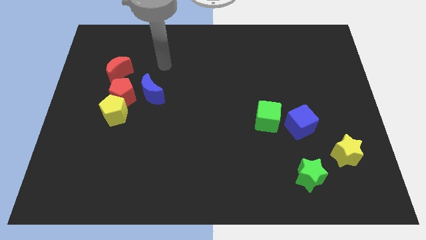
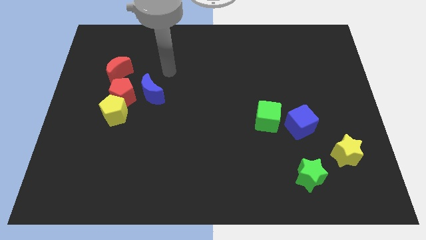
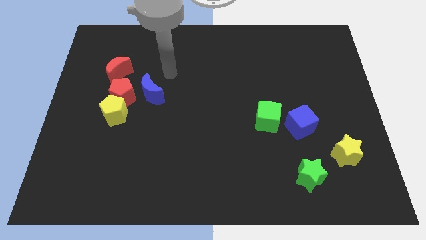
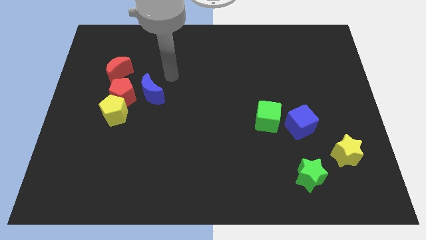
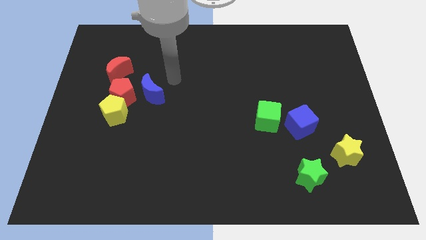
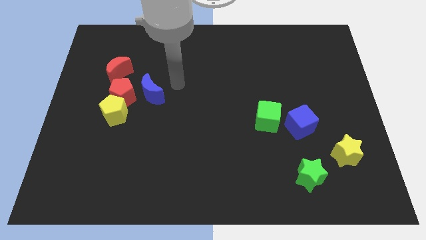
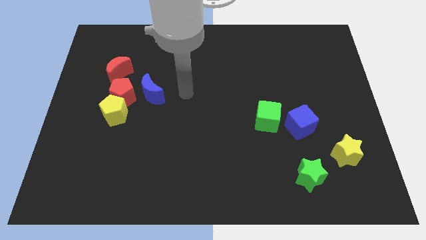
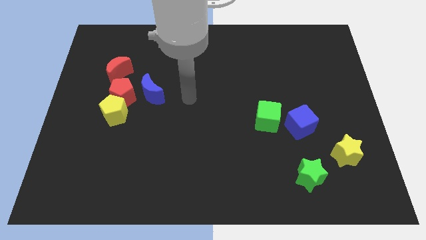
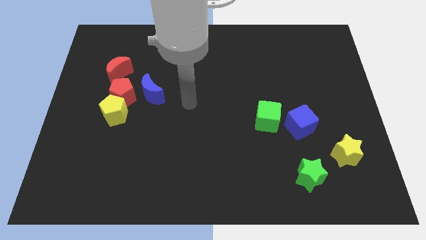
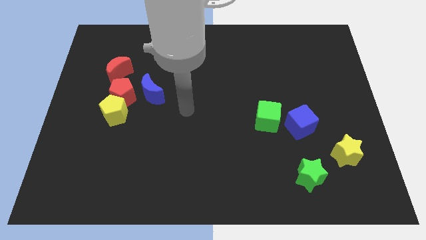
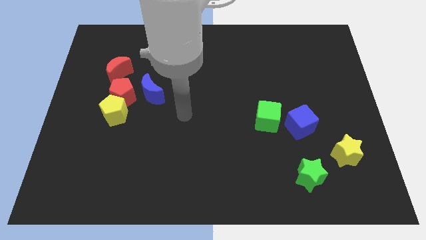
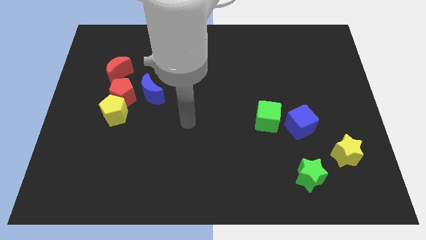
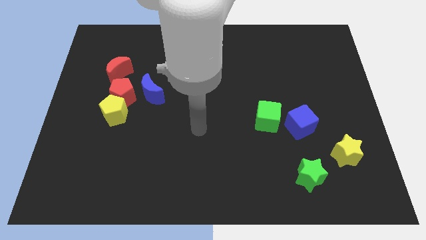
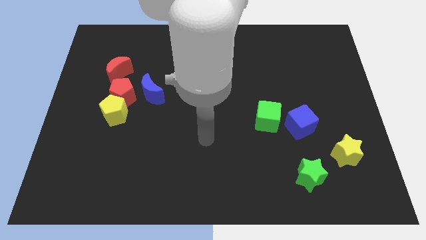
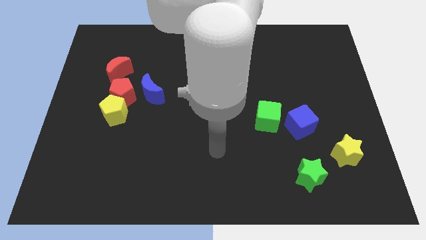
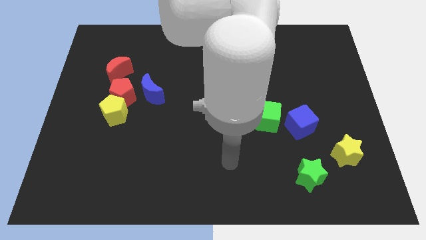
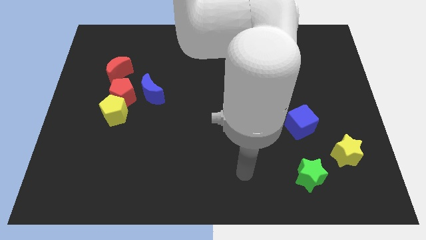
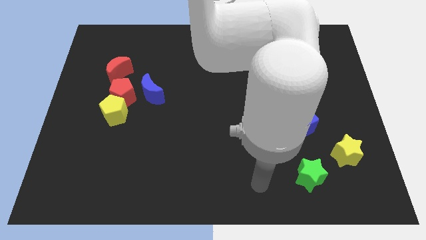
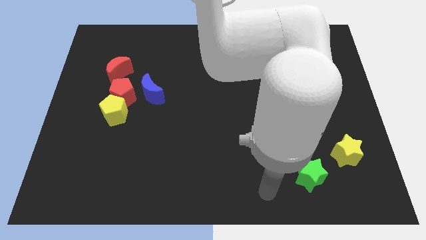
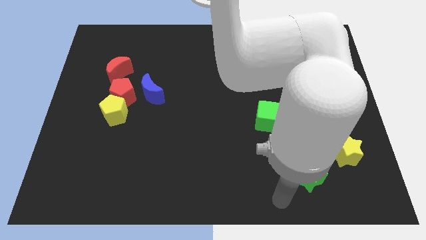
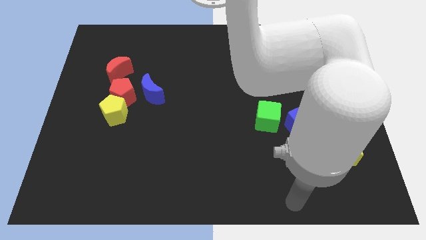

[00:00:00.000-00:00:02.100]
move your star towards the green star

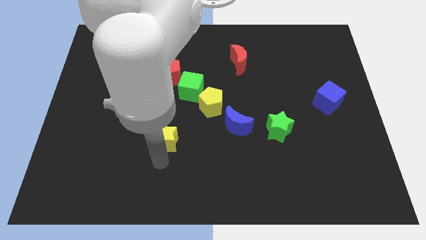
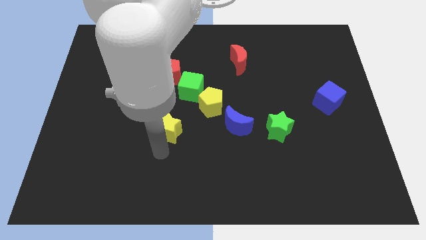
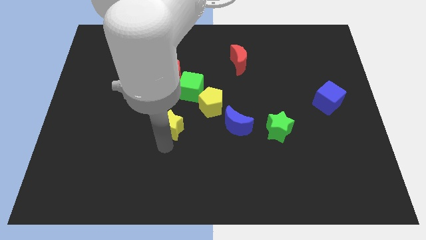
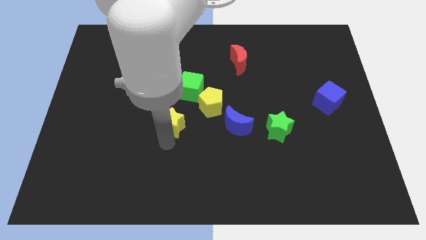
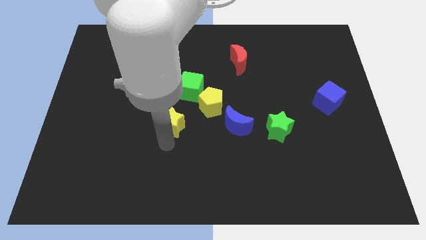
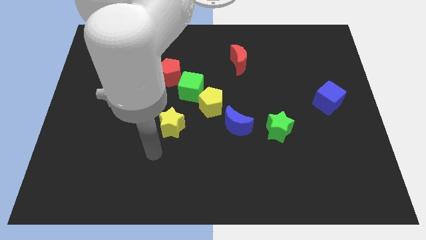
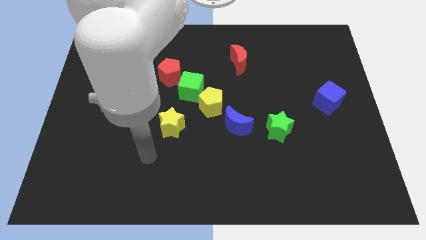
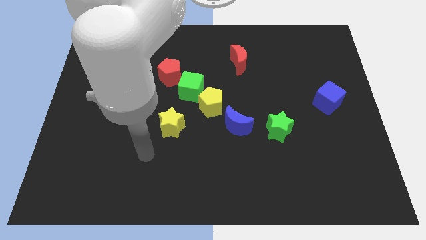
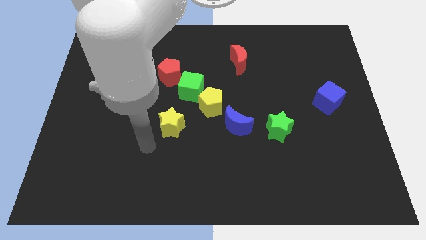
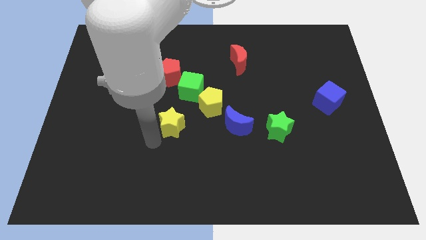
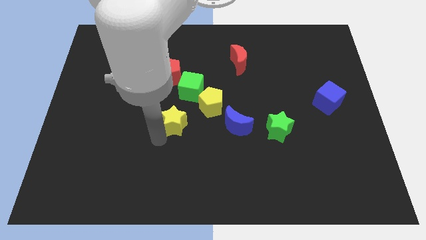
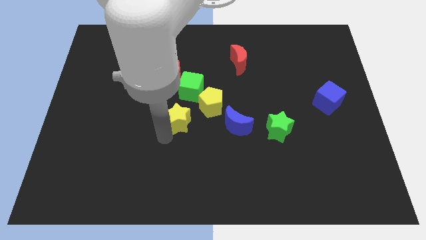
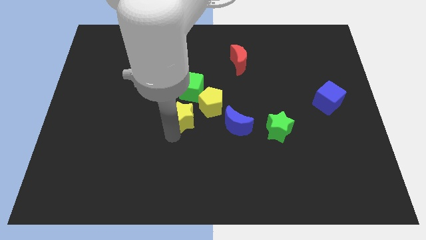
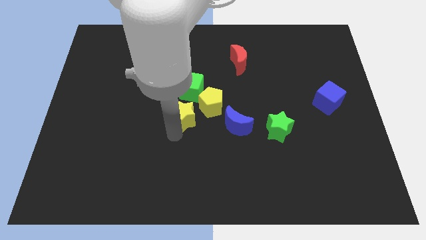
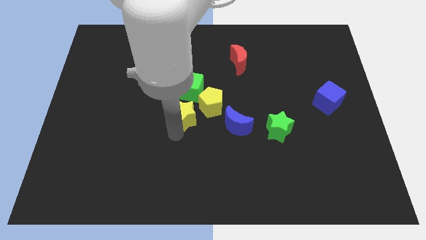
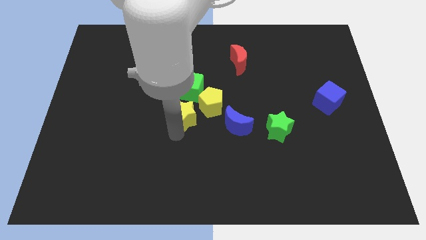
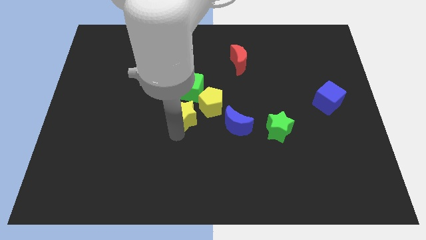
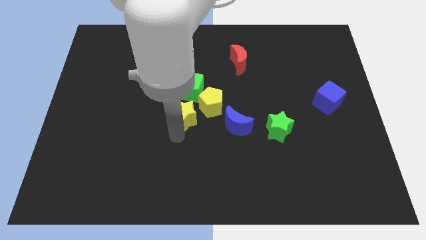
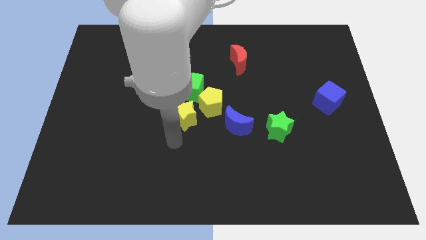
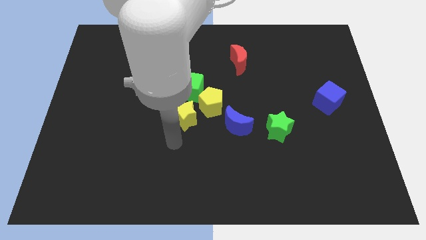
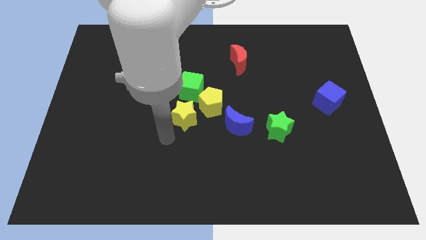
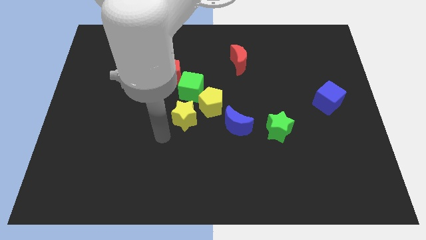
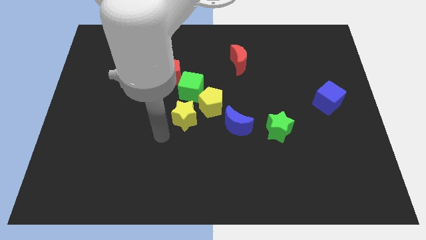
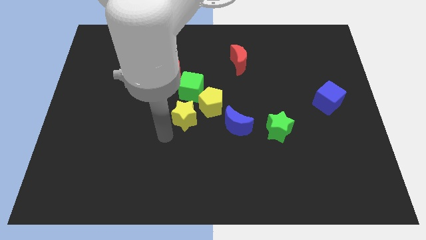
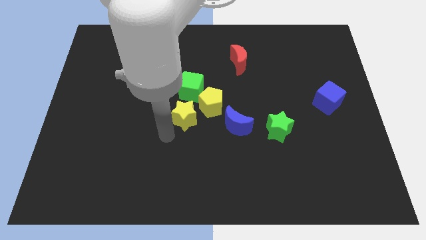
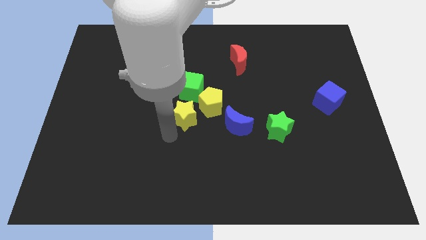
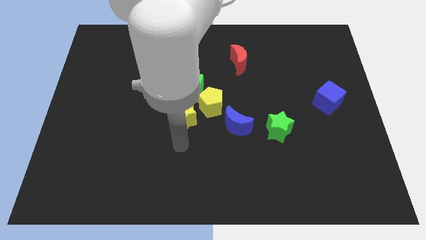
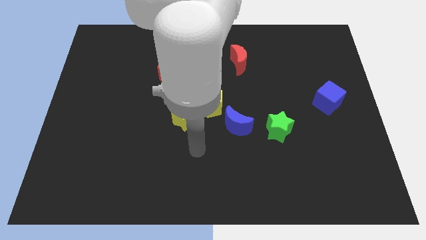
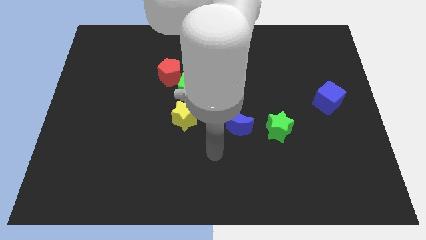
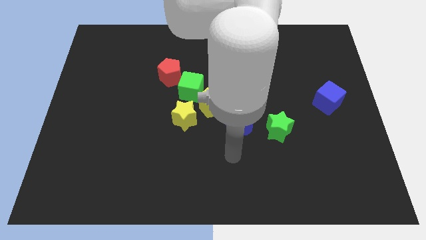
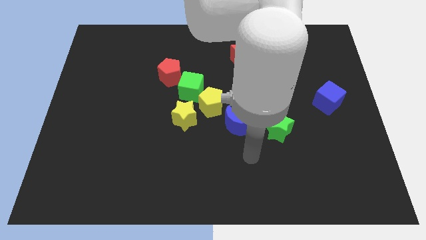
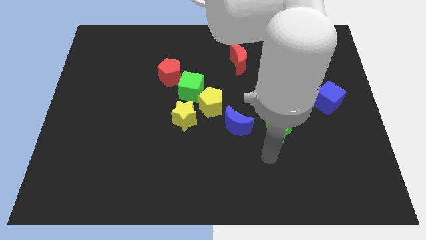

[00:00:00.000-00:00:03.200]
place the yellow star beside the yellow pentagon

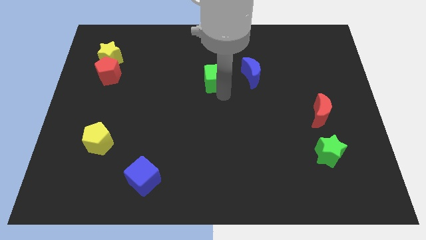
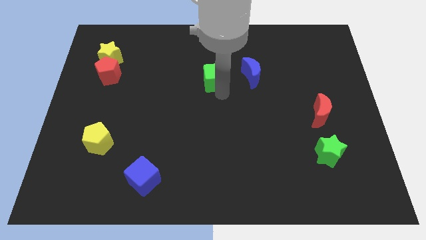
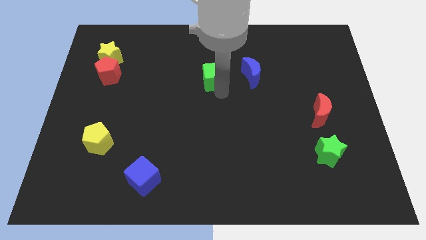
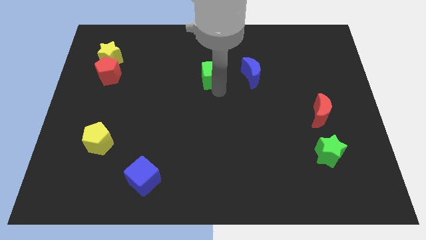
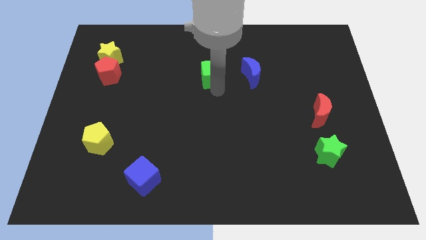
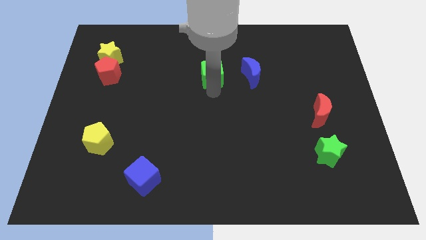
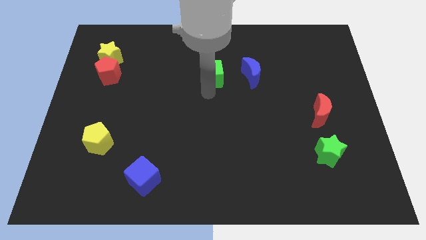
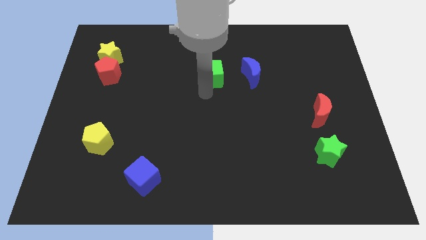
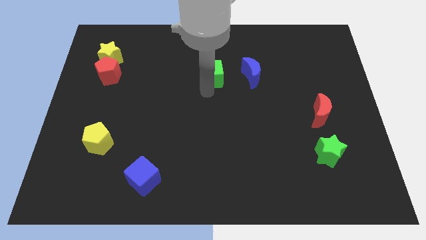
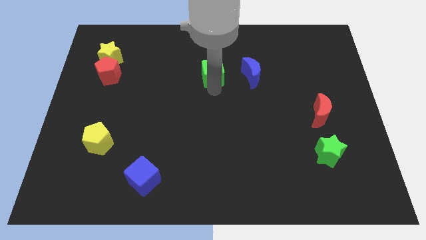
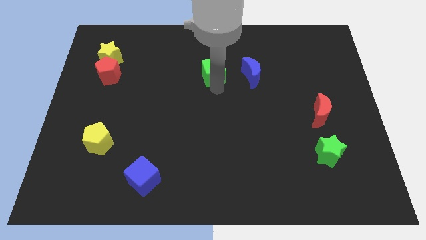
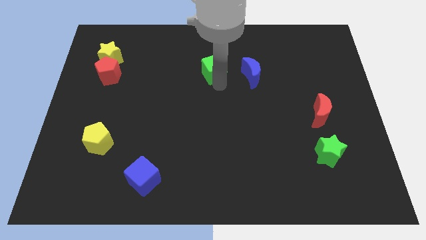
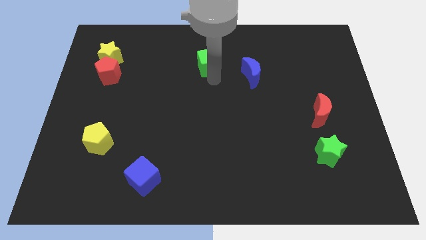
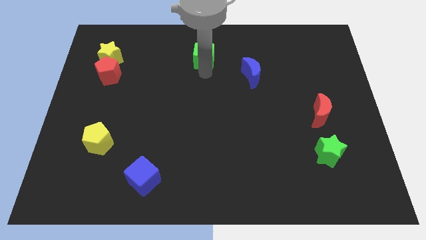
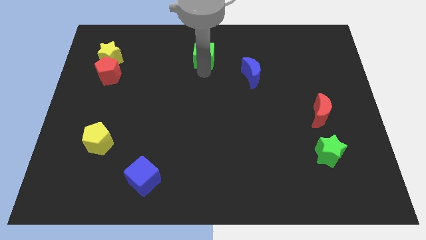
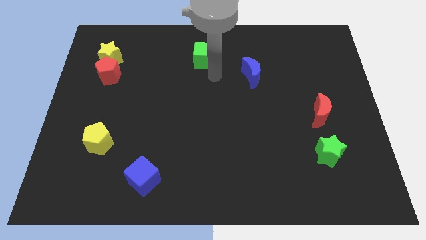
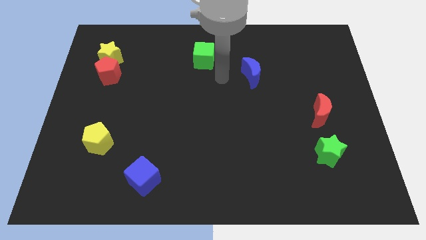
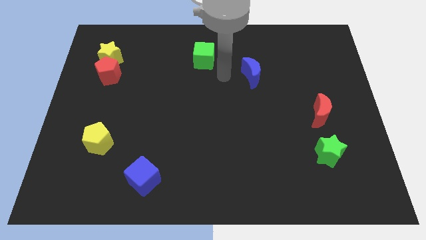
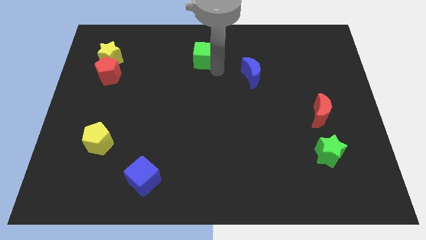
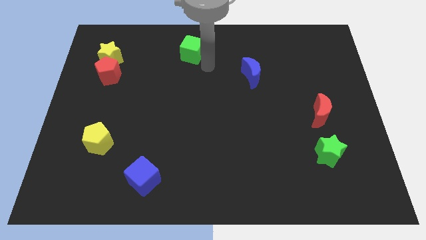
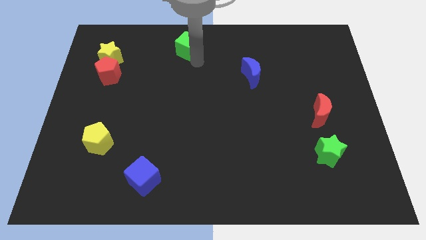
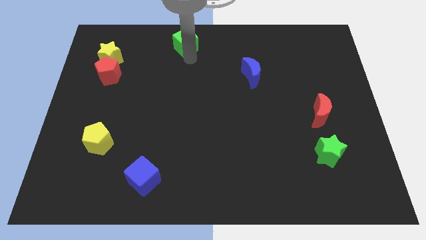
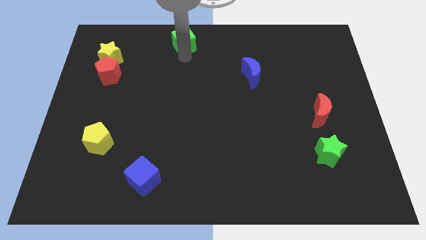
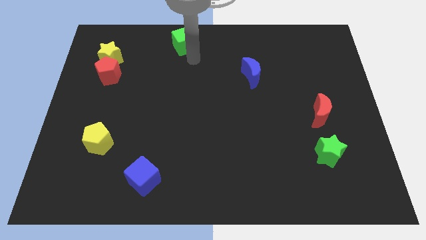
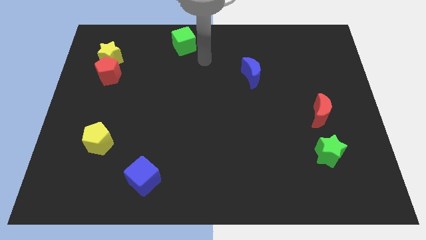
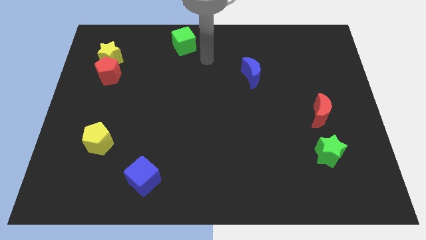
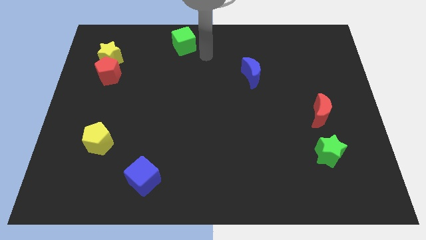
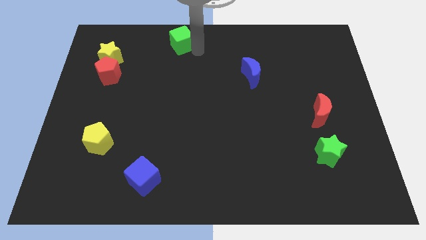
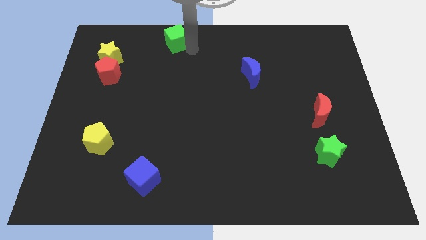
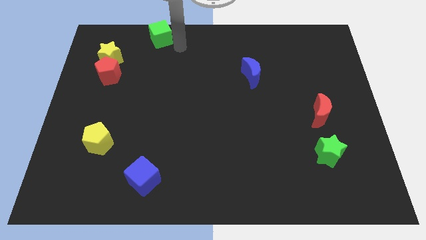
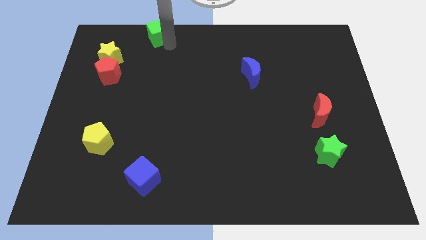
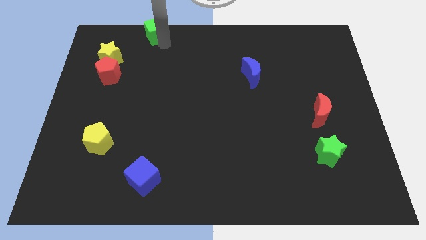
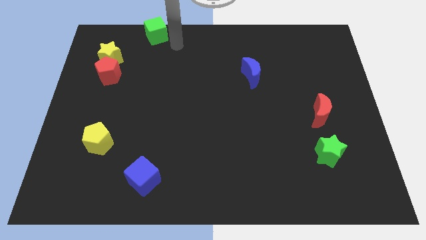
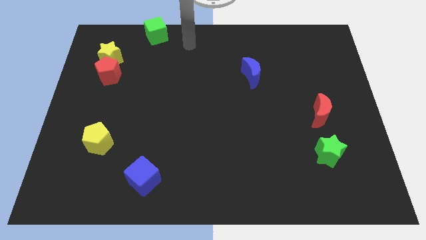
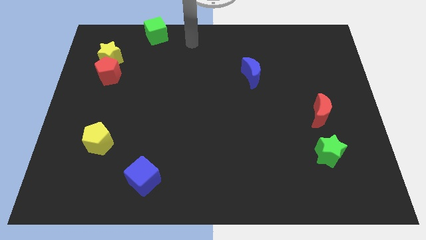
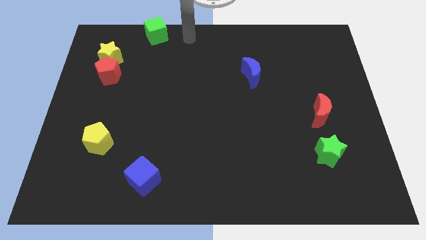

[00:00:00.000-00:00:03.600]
separate green cube from blue crescent
